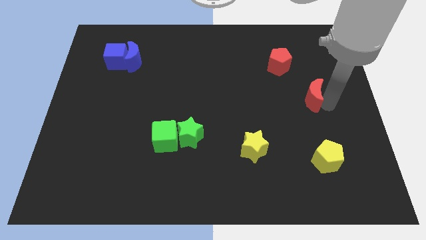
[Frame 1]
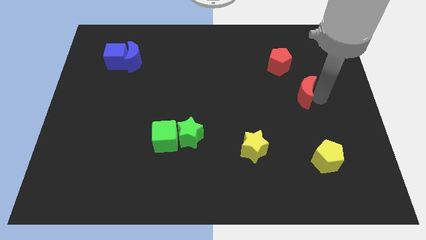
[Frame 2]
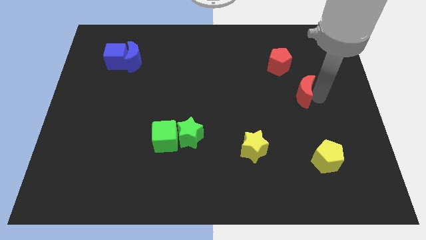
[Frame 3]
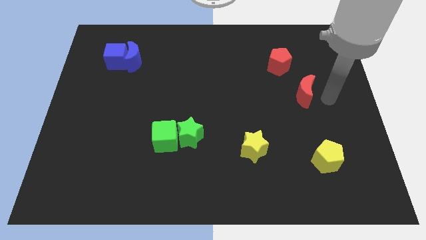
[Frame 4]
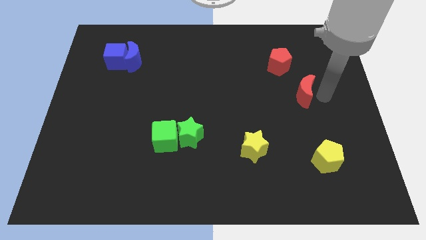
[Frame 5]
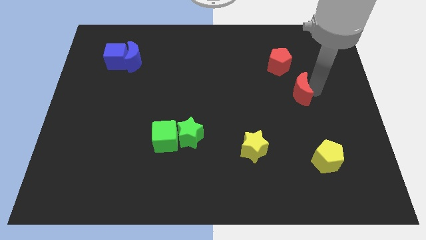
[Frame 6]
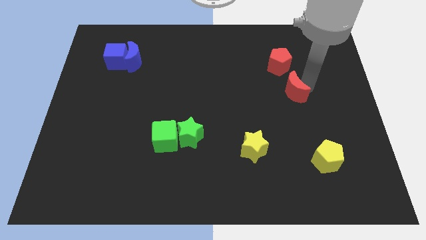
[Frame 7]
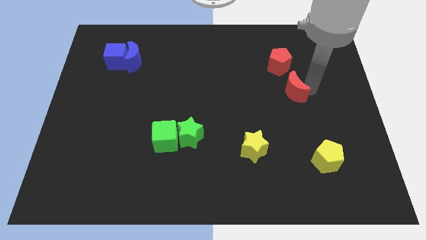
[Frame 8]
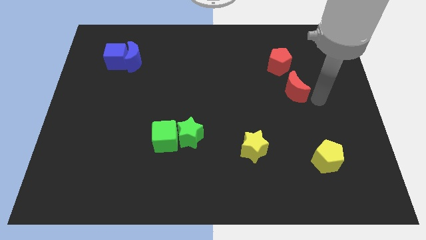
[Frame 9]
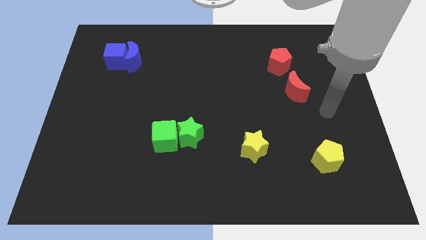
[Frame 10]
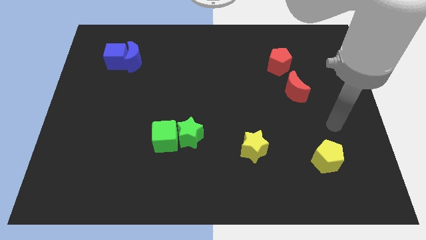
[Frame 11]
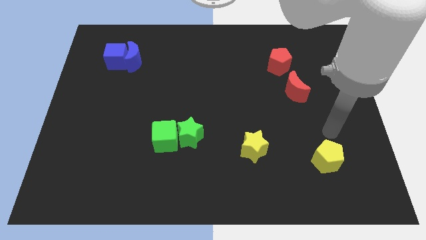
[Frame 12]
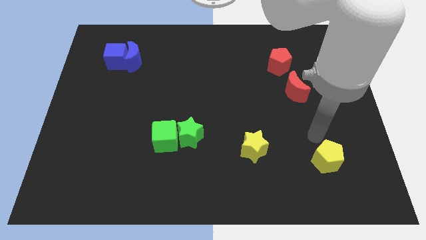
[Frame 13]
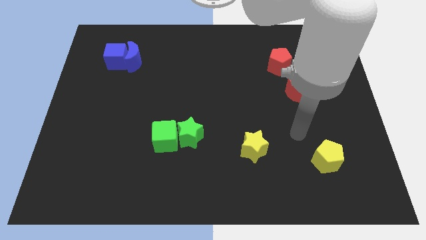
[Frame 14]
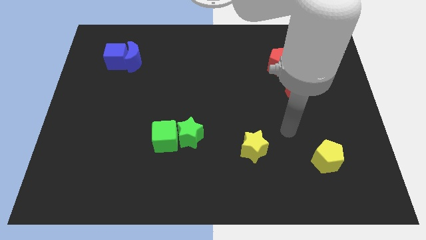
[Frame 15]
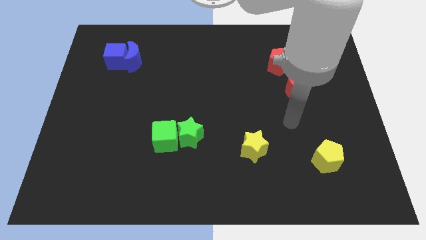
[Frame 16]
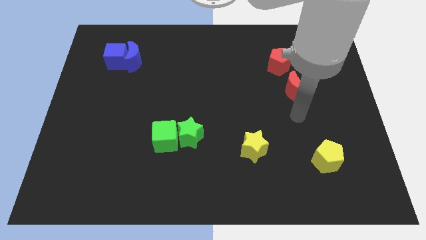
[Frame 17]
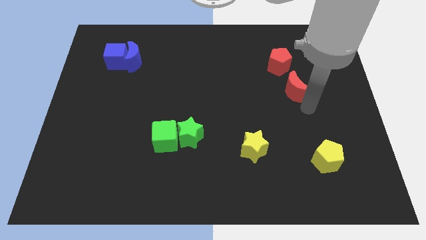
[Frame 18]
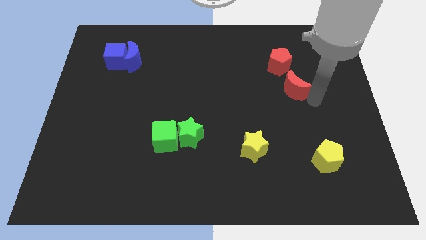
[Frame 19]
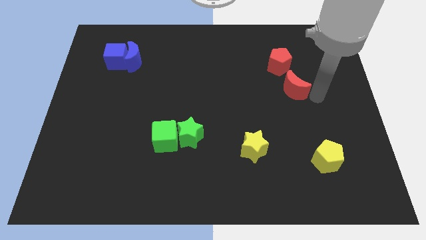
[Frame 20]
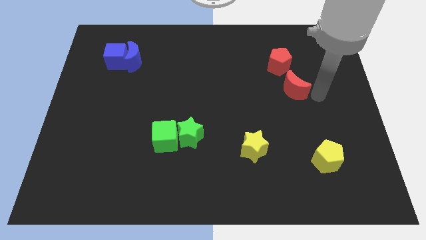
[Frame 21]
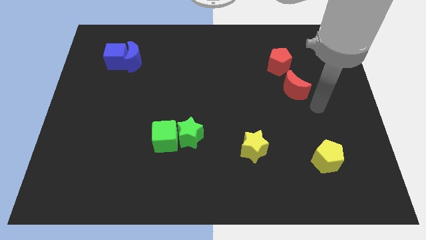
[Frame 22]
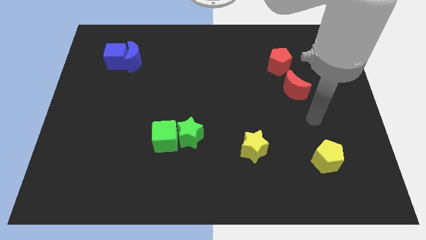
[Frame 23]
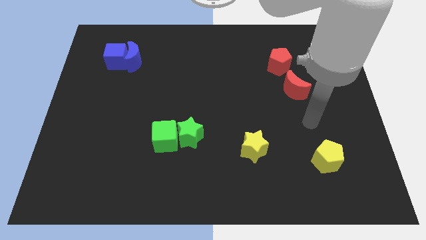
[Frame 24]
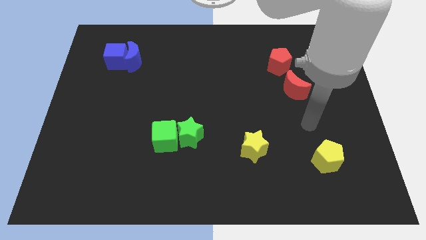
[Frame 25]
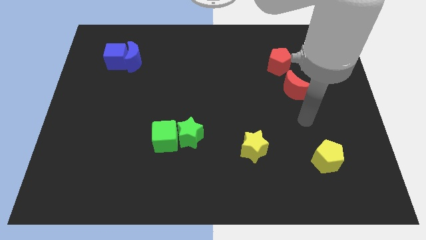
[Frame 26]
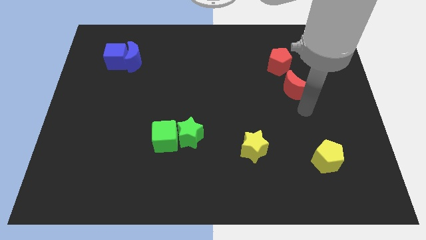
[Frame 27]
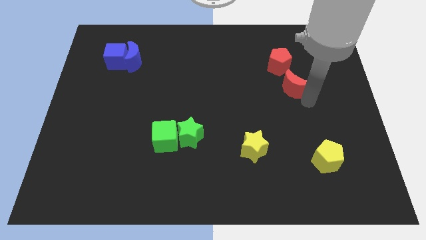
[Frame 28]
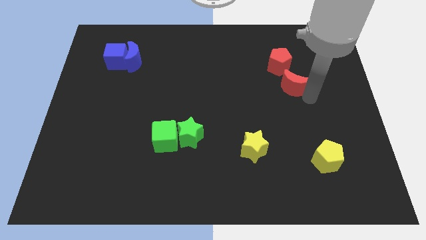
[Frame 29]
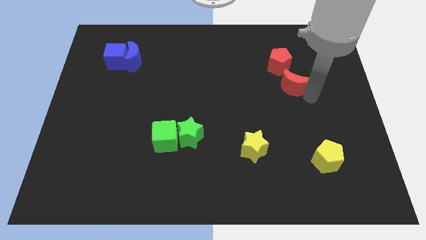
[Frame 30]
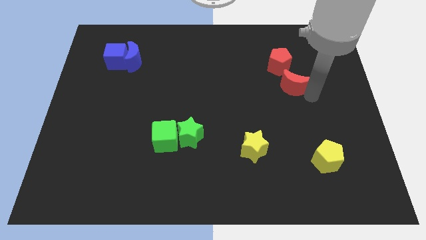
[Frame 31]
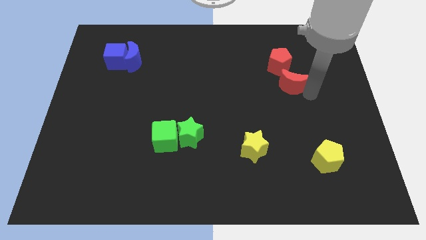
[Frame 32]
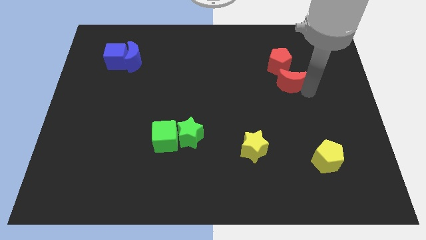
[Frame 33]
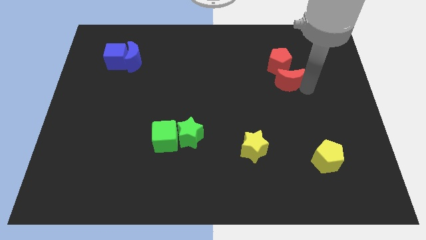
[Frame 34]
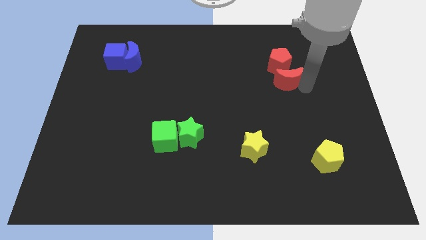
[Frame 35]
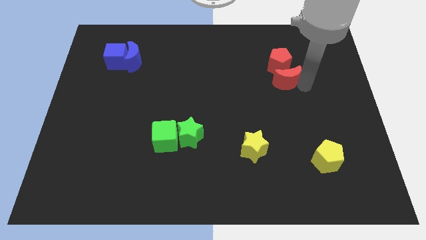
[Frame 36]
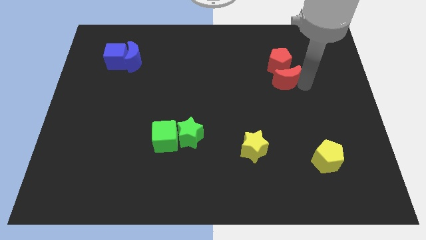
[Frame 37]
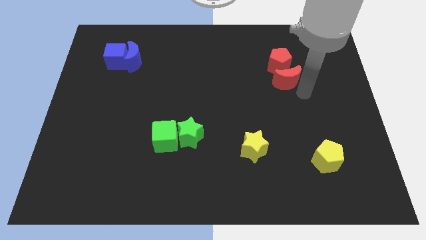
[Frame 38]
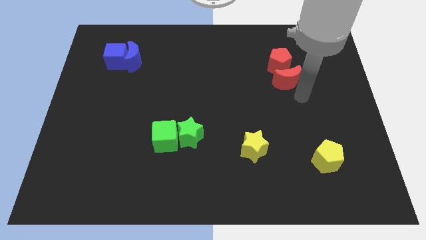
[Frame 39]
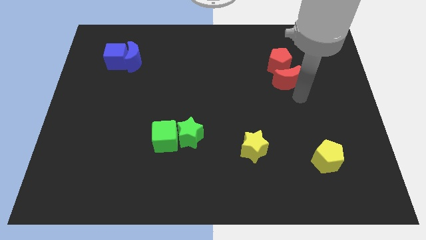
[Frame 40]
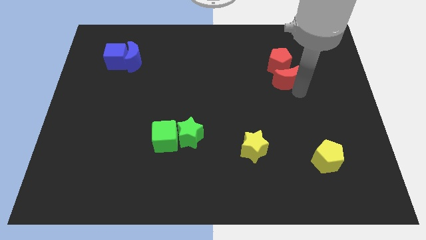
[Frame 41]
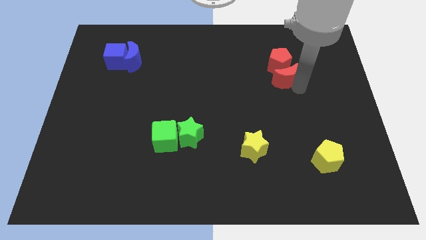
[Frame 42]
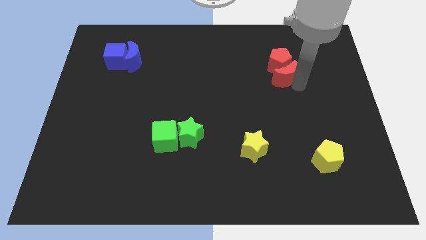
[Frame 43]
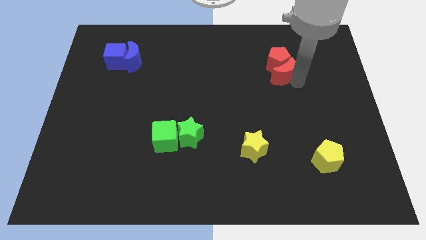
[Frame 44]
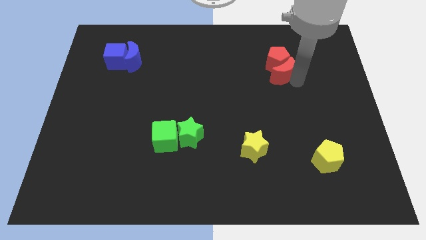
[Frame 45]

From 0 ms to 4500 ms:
put the red crescent at the bottom of red pentagon

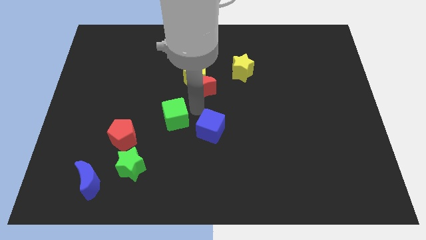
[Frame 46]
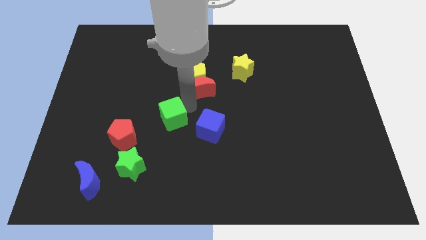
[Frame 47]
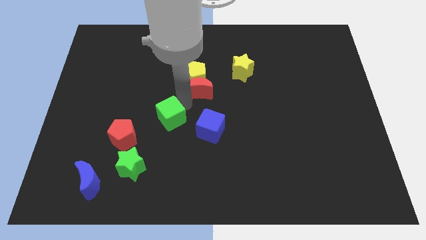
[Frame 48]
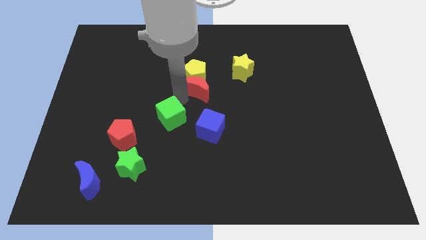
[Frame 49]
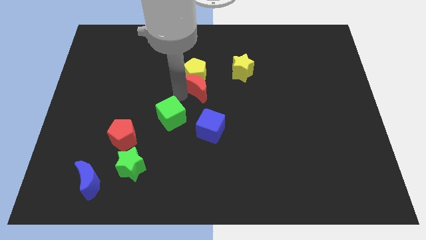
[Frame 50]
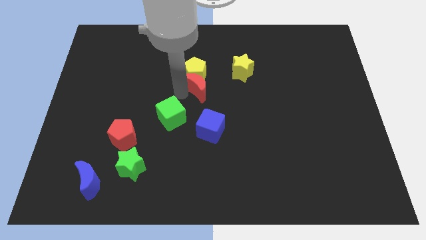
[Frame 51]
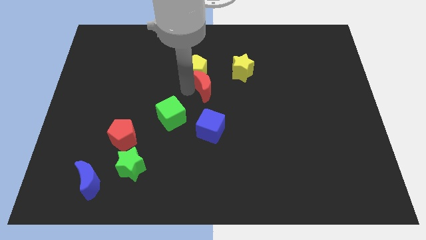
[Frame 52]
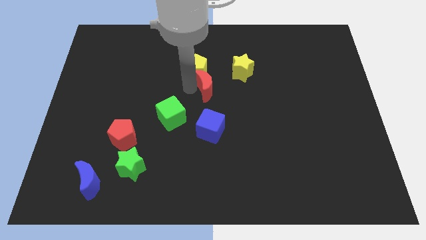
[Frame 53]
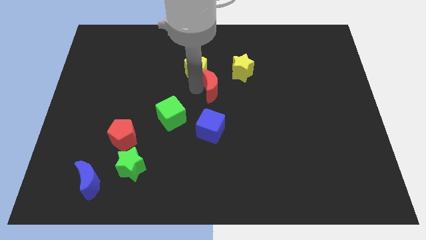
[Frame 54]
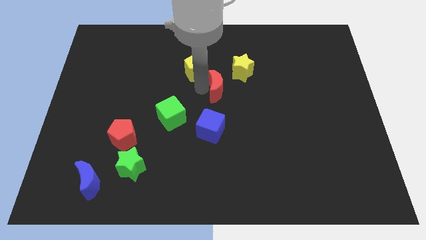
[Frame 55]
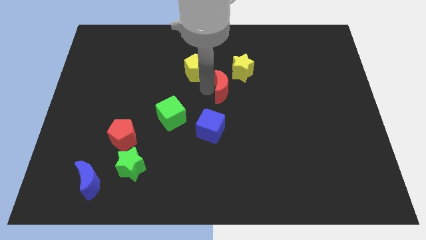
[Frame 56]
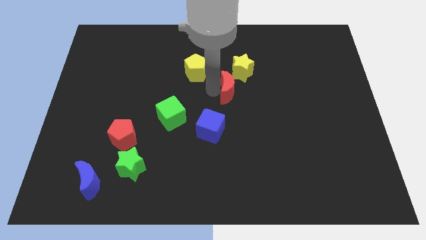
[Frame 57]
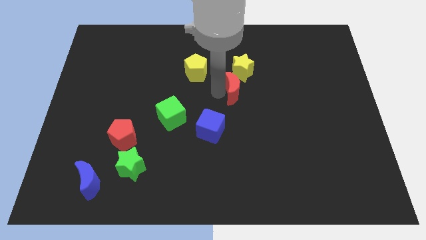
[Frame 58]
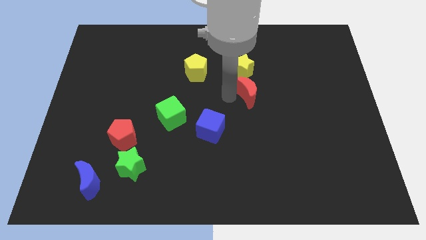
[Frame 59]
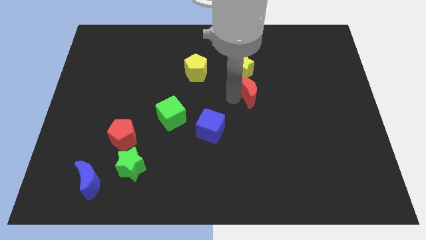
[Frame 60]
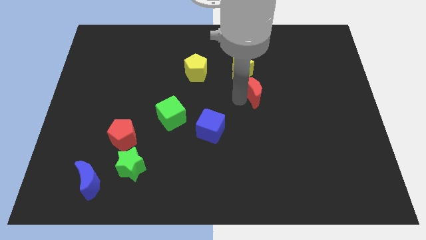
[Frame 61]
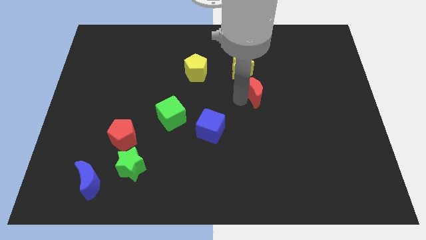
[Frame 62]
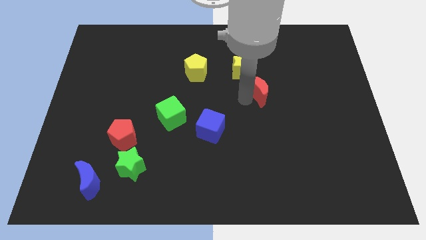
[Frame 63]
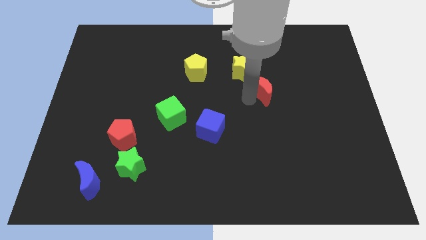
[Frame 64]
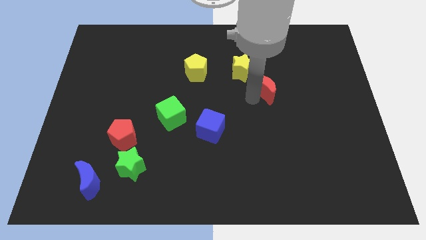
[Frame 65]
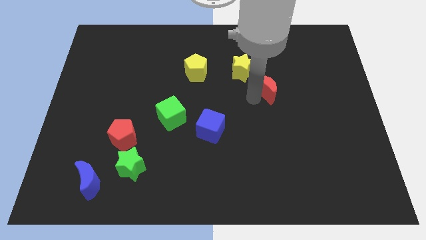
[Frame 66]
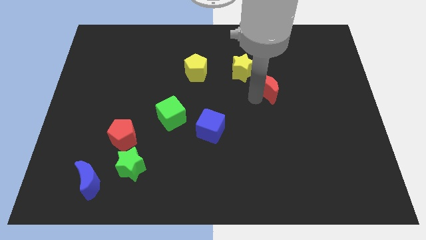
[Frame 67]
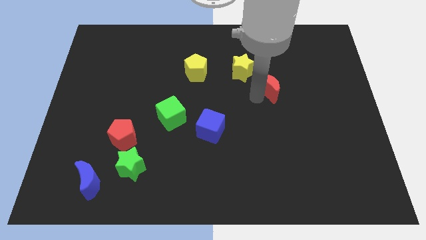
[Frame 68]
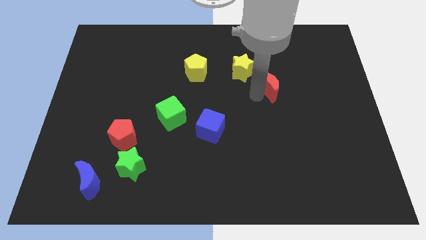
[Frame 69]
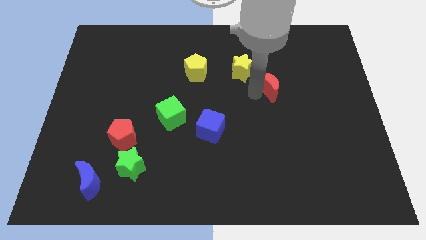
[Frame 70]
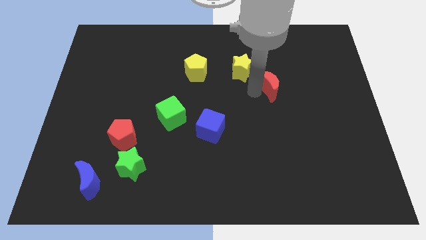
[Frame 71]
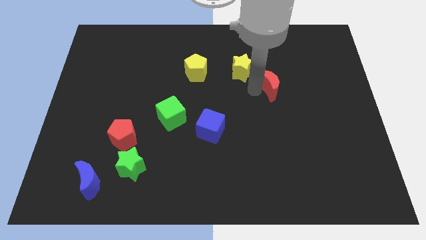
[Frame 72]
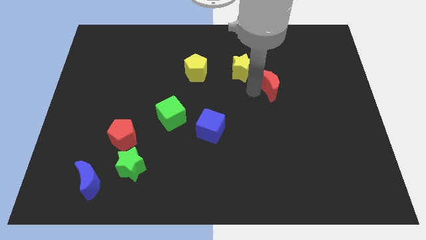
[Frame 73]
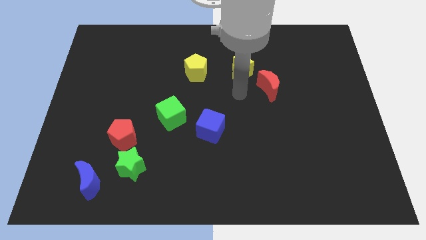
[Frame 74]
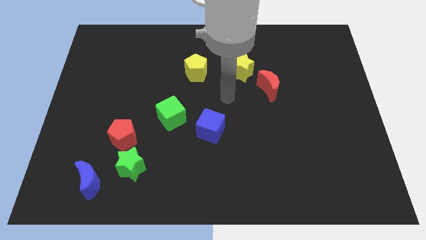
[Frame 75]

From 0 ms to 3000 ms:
push the red crescent to the bottom right of the yellow star

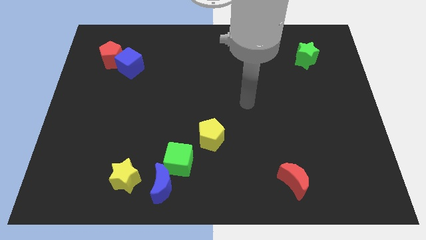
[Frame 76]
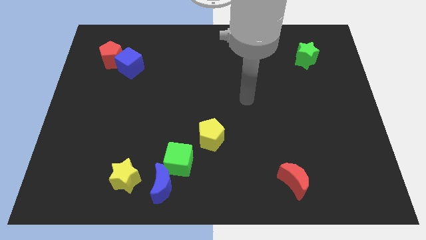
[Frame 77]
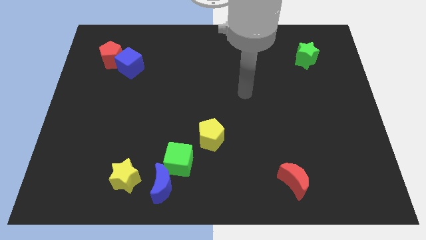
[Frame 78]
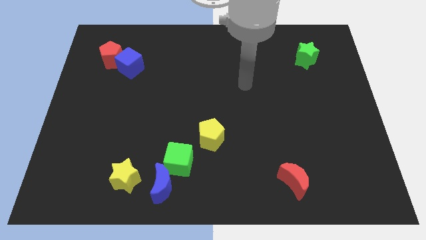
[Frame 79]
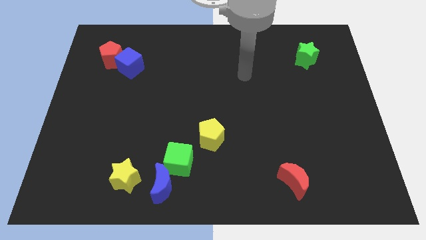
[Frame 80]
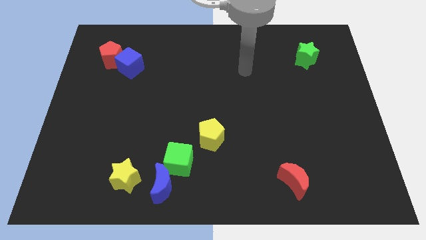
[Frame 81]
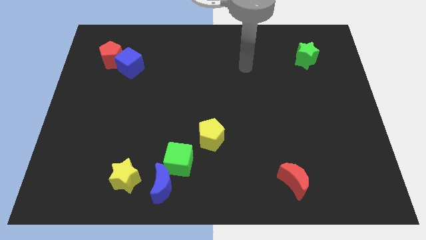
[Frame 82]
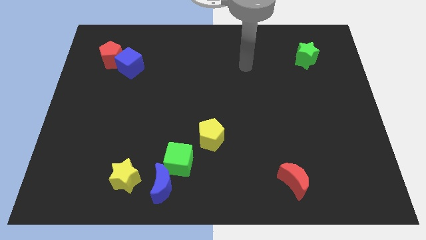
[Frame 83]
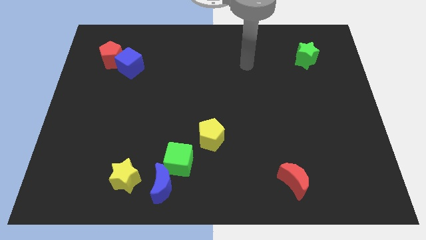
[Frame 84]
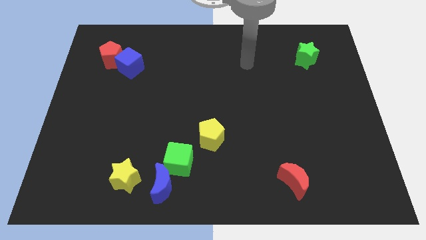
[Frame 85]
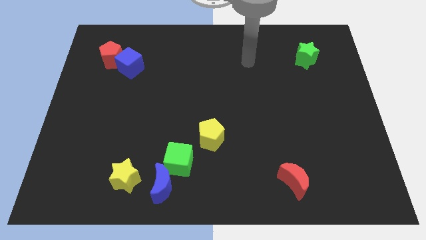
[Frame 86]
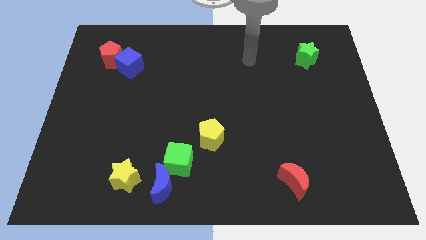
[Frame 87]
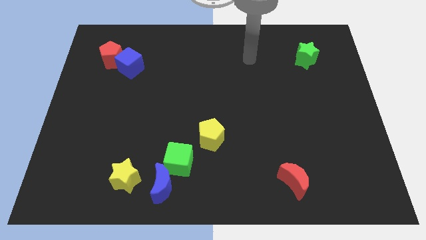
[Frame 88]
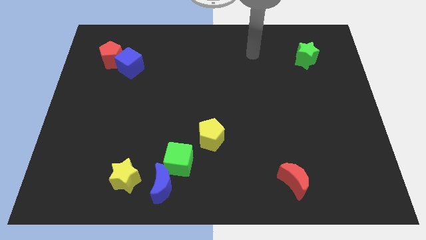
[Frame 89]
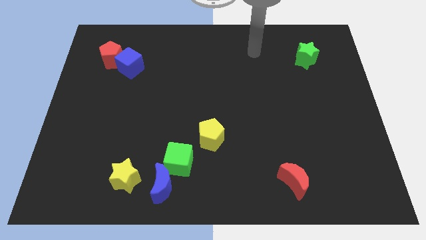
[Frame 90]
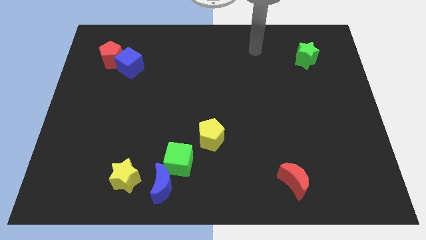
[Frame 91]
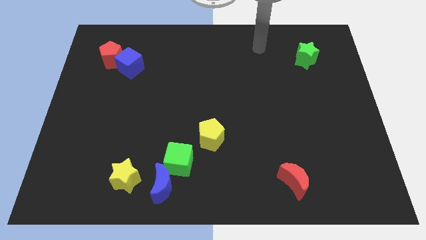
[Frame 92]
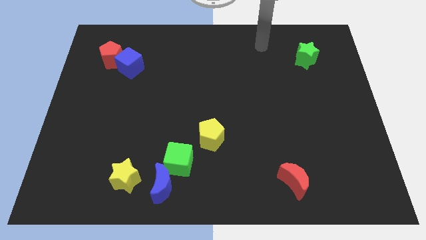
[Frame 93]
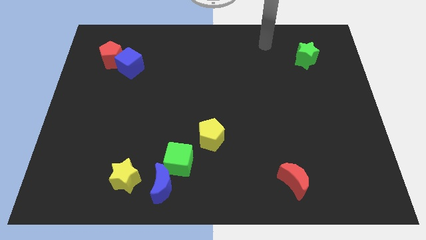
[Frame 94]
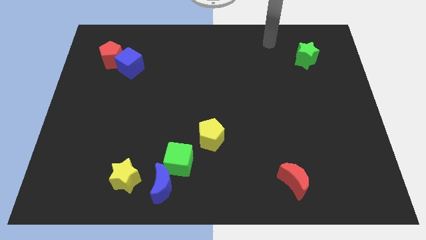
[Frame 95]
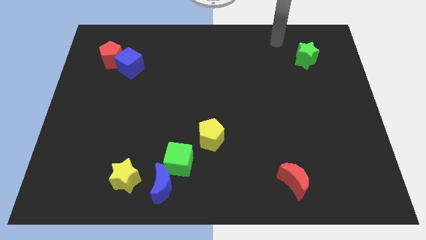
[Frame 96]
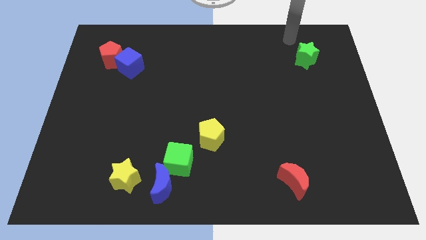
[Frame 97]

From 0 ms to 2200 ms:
place your hand at the top left side of the green star
